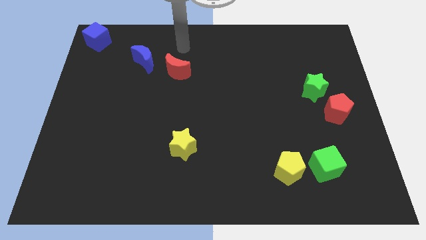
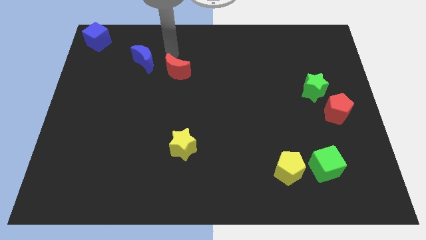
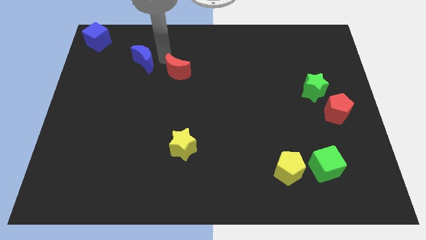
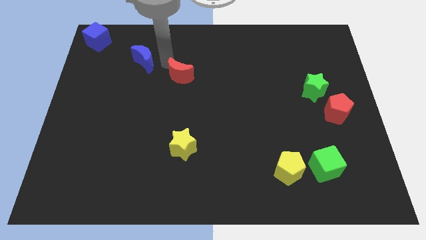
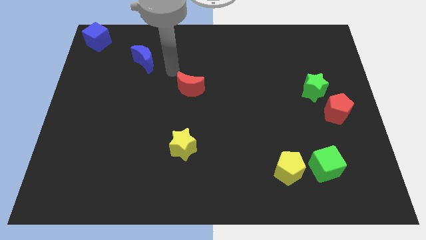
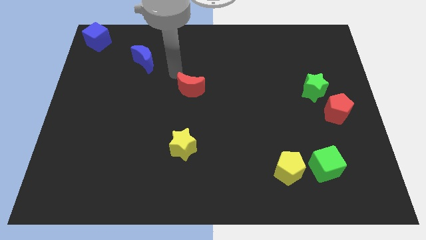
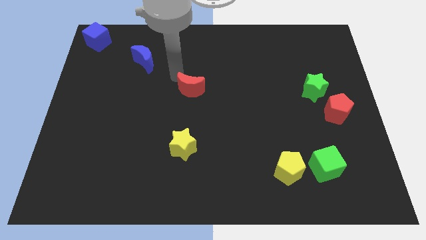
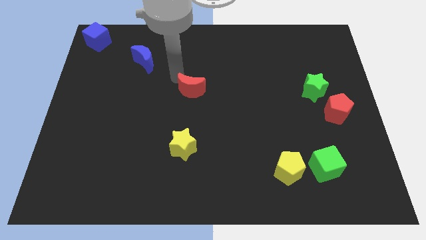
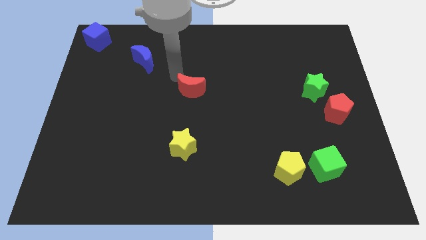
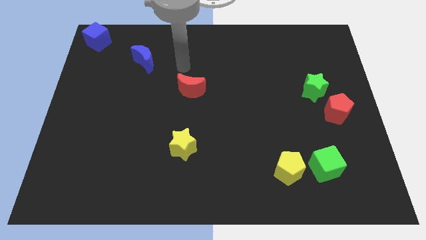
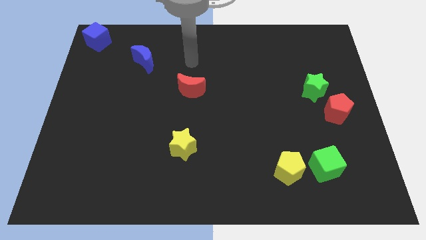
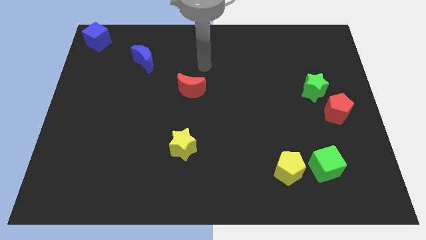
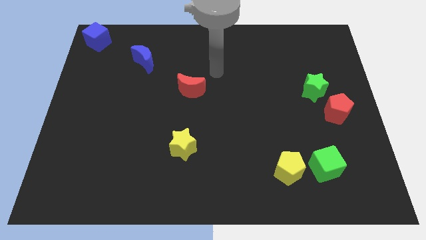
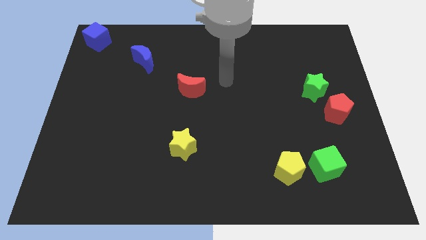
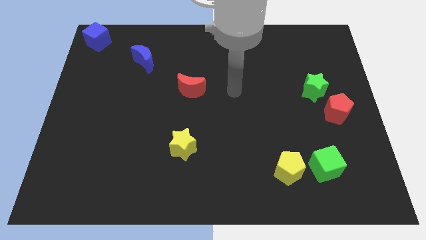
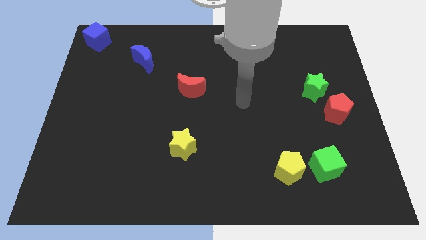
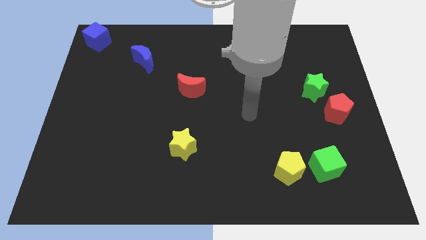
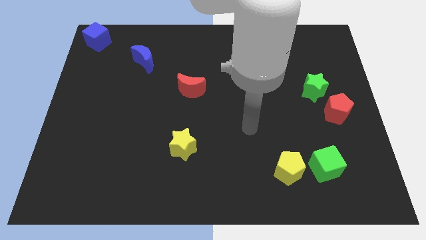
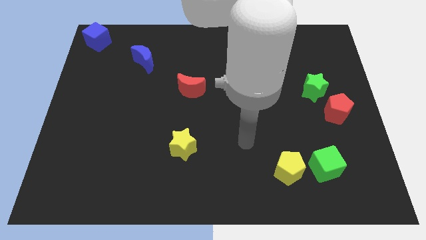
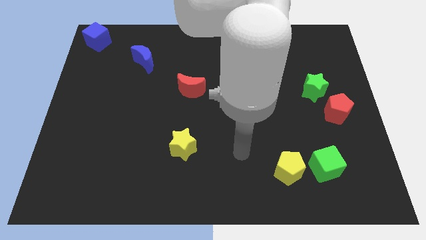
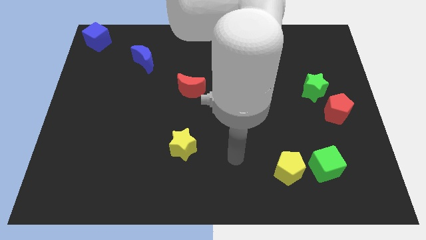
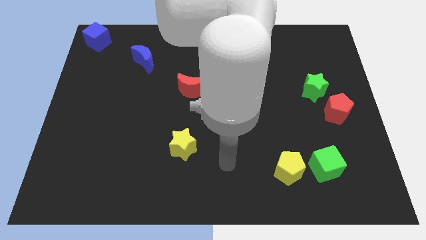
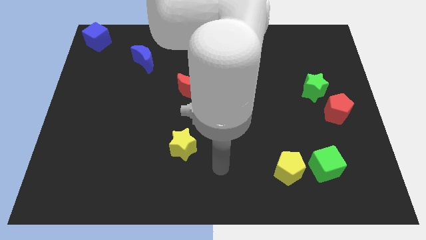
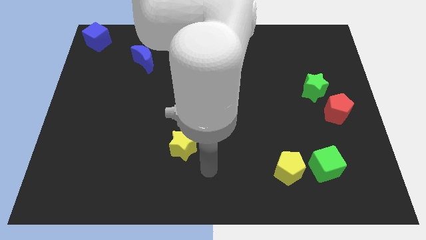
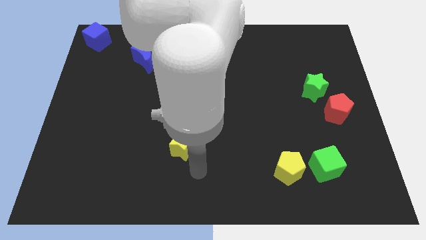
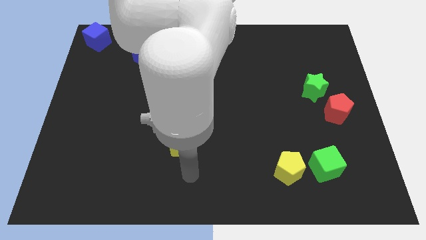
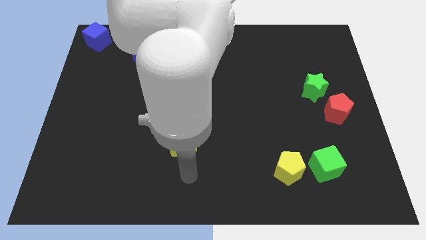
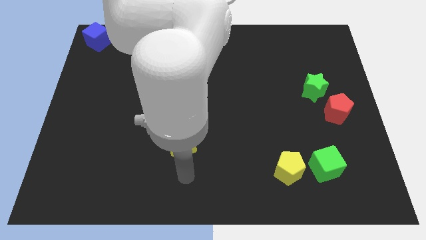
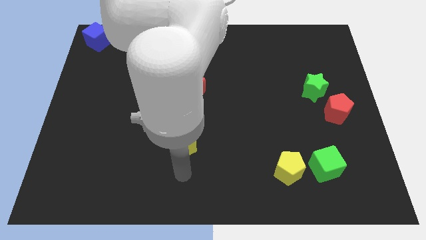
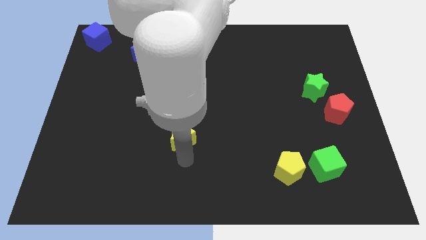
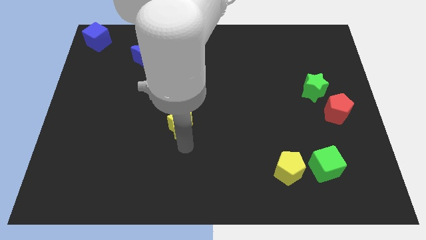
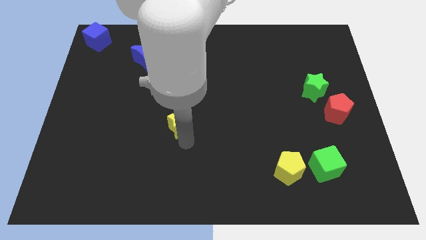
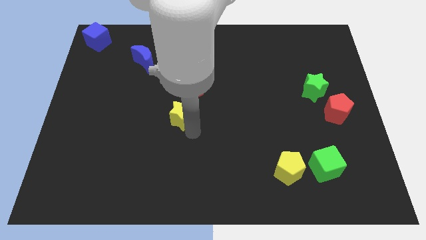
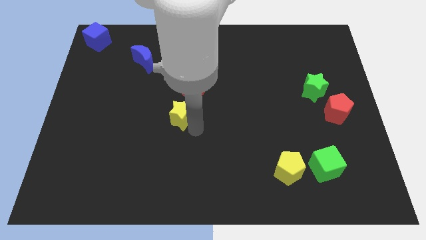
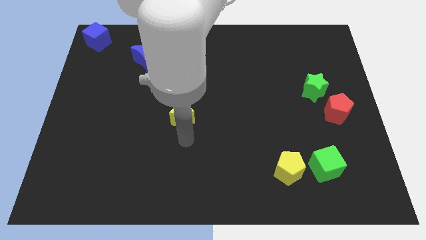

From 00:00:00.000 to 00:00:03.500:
move yellow star below red moon

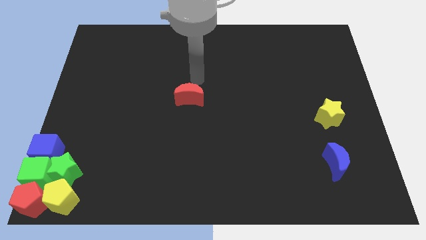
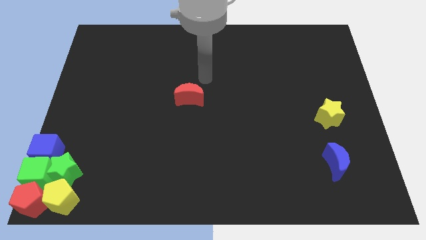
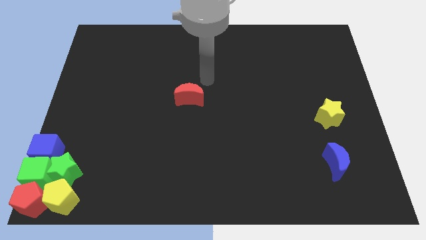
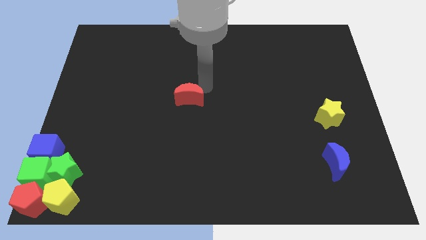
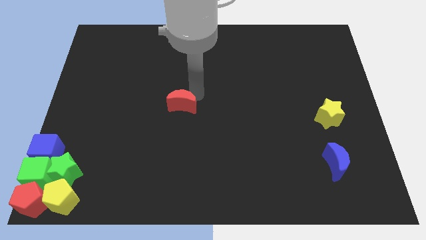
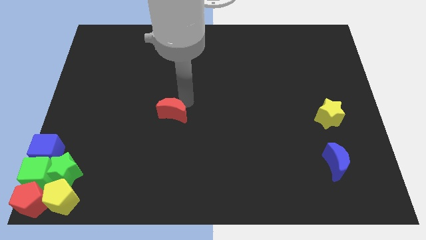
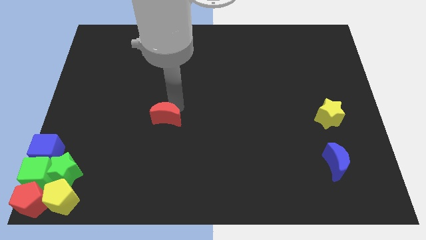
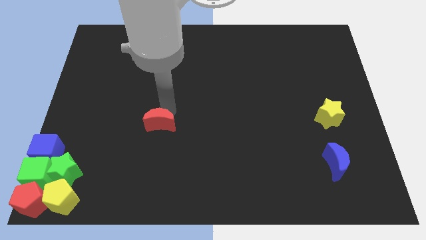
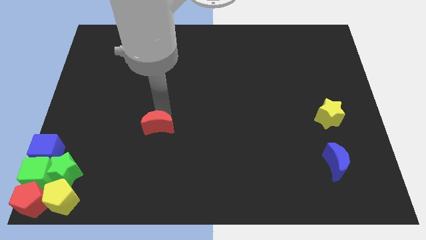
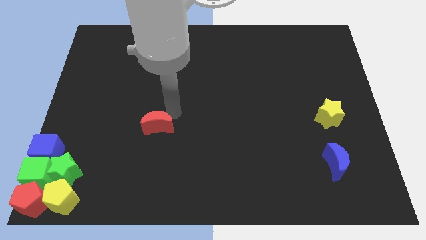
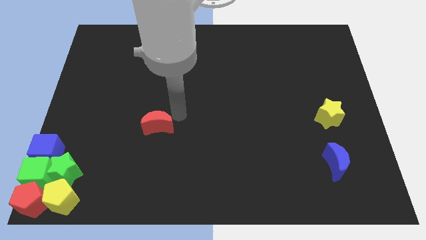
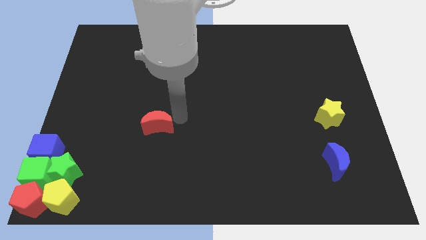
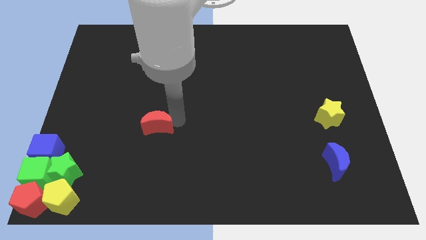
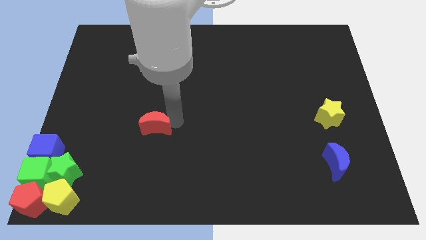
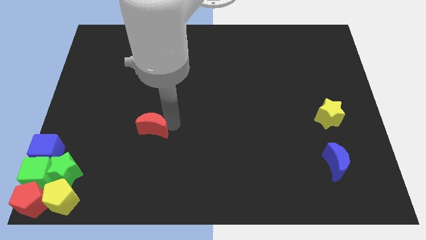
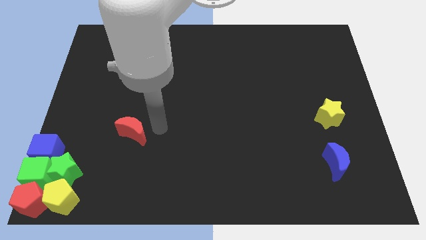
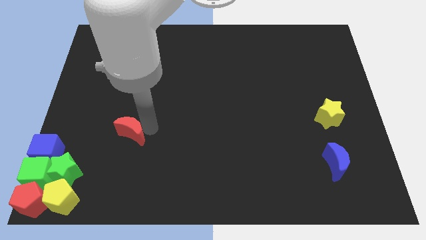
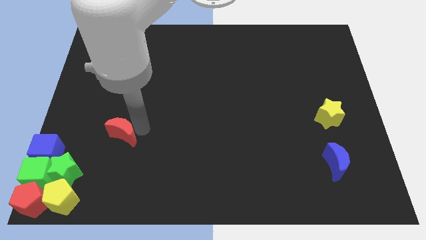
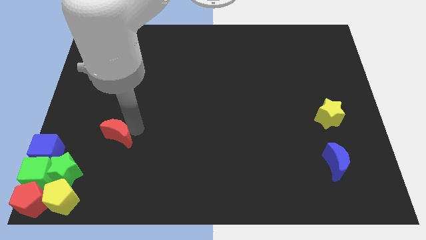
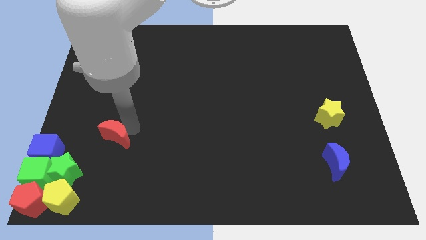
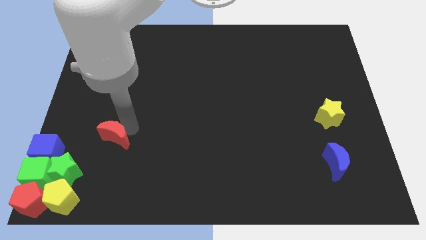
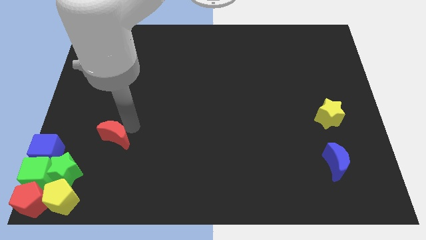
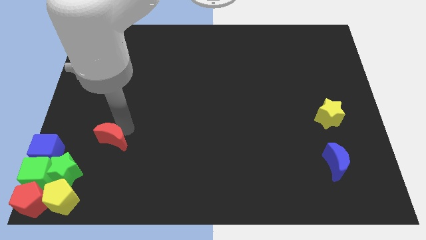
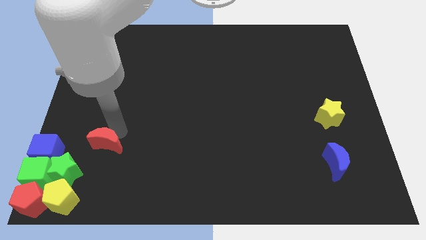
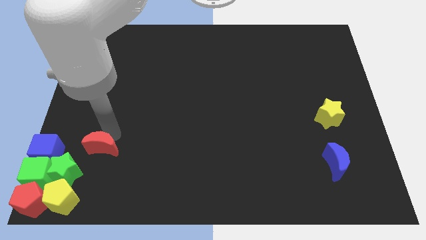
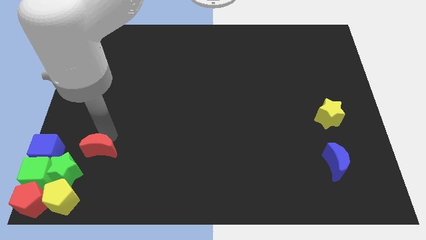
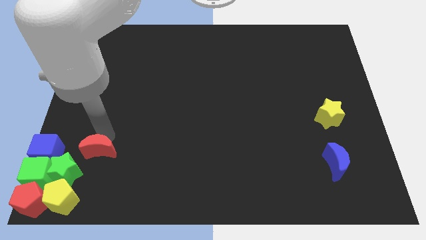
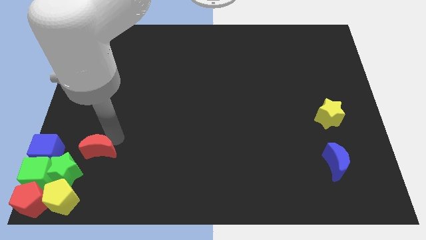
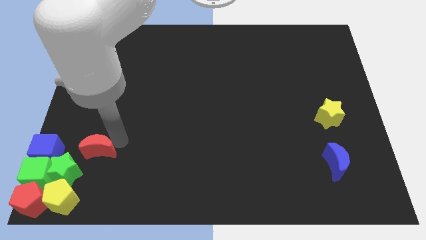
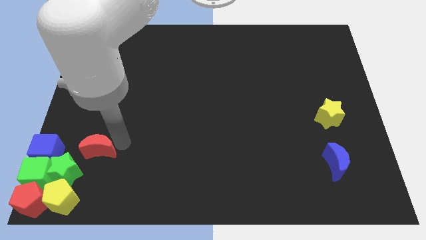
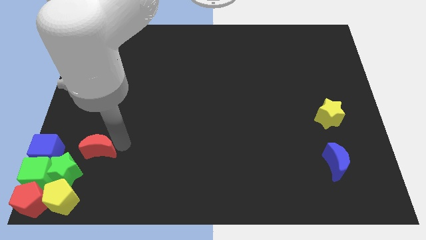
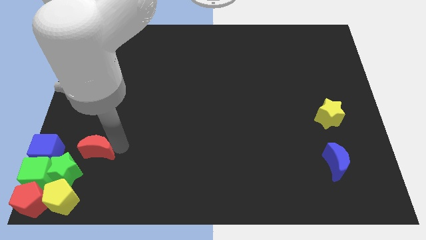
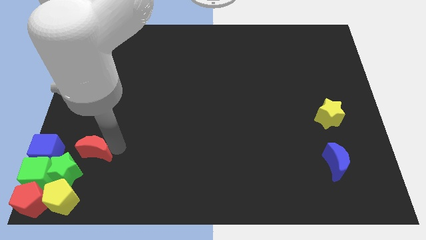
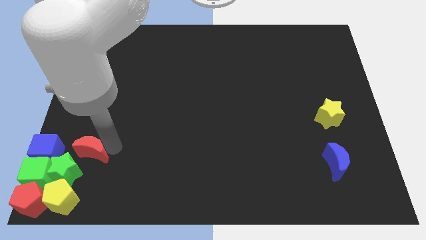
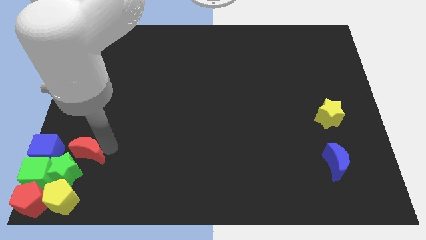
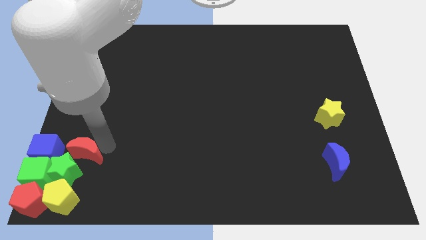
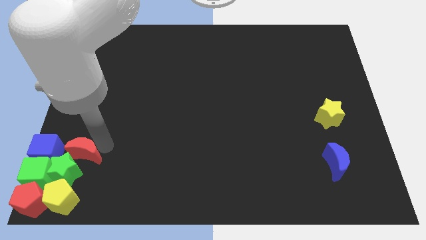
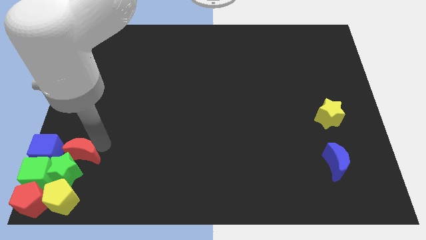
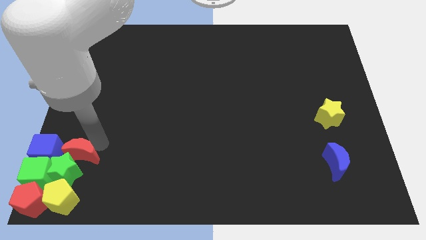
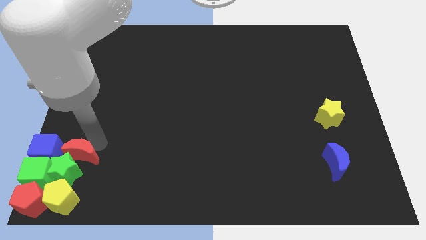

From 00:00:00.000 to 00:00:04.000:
place the red moon above the green star

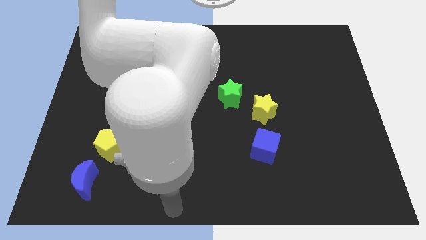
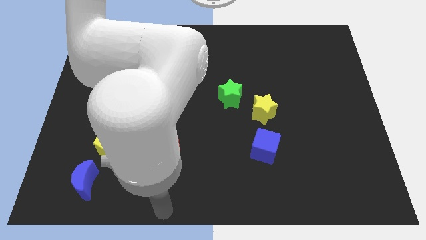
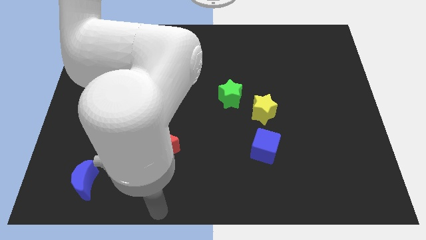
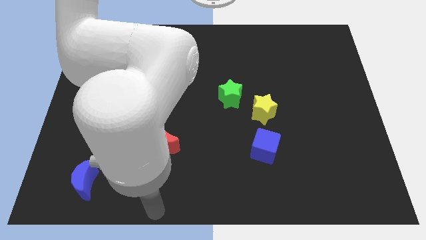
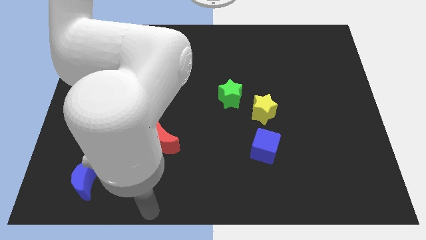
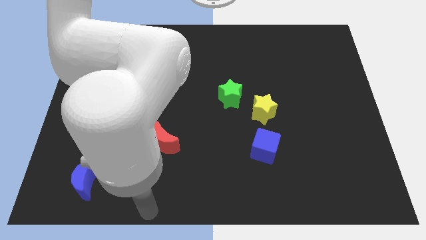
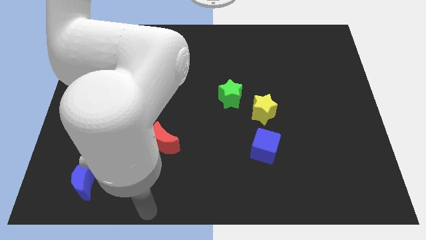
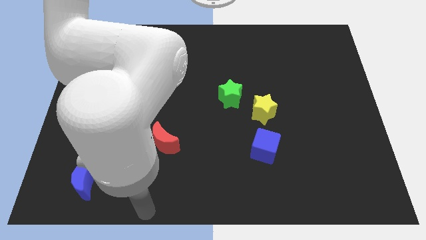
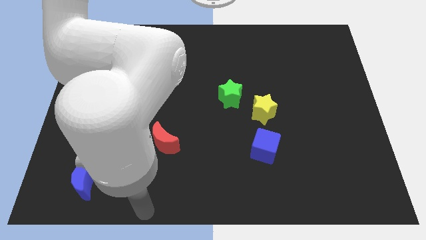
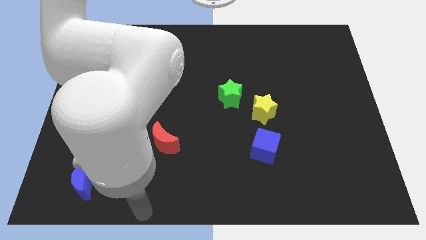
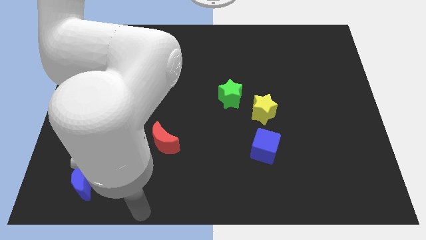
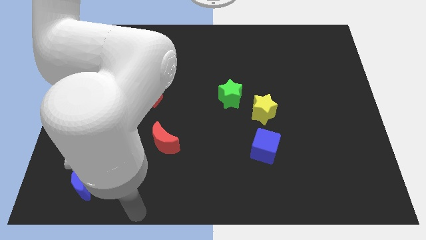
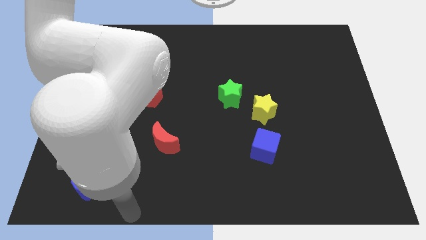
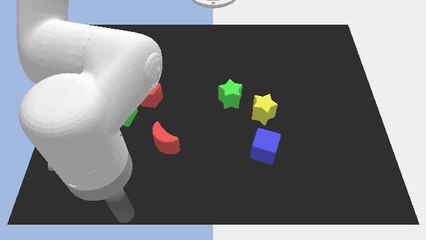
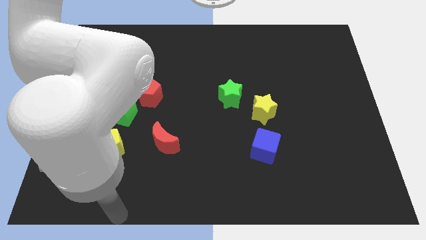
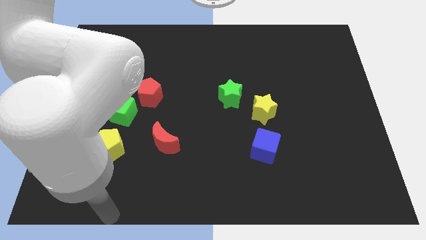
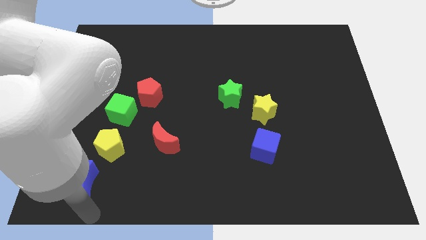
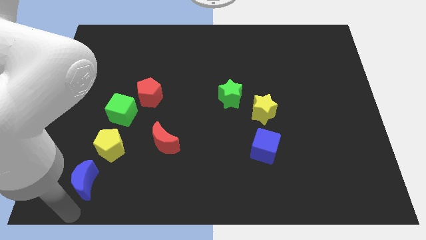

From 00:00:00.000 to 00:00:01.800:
point your arm at the bottom of the blue crescent
